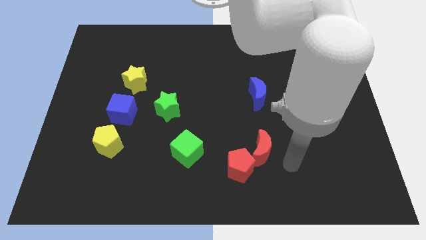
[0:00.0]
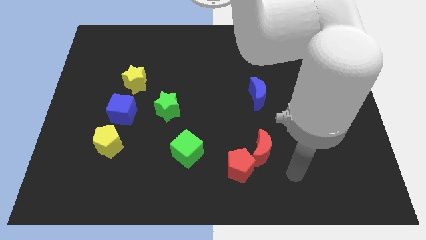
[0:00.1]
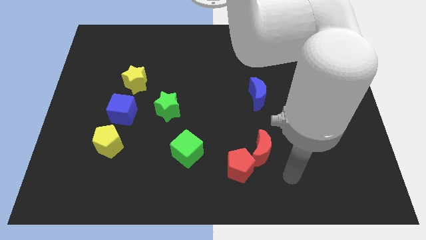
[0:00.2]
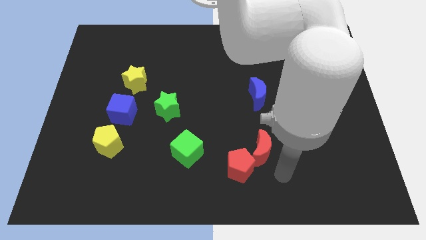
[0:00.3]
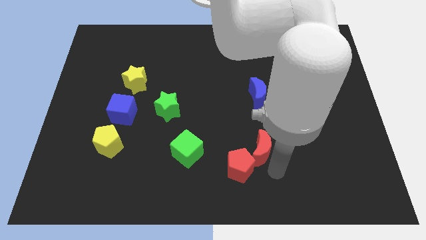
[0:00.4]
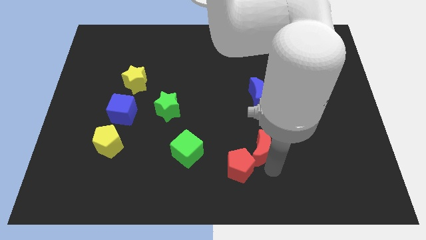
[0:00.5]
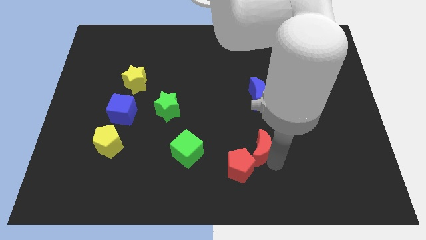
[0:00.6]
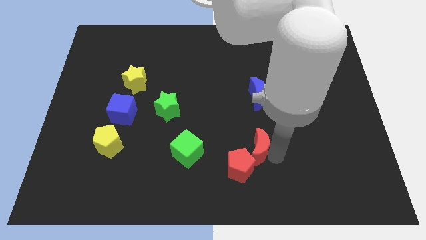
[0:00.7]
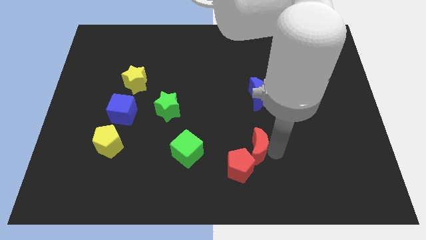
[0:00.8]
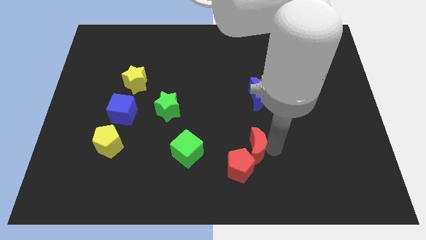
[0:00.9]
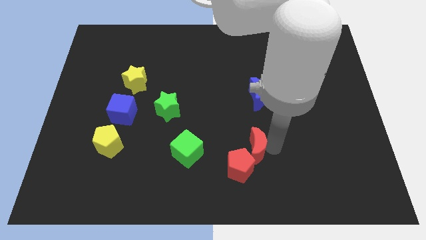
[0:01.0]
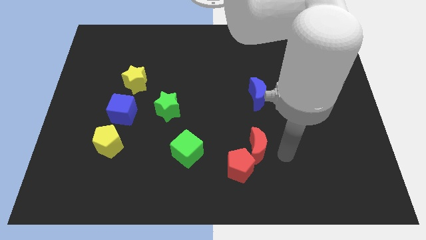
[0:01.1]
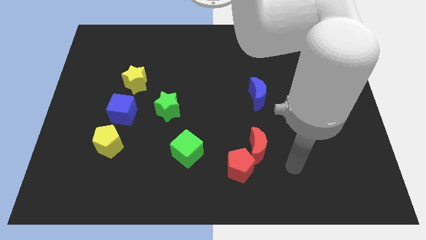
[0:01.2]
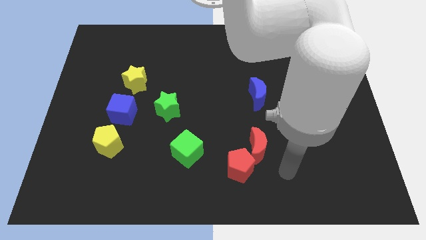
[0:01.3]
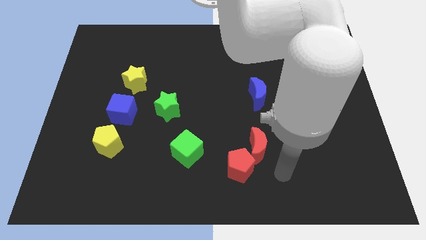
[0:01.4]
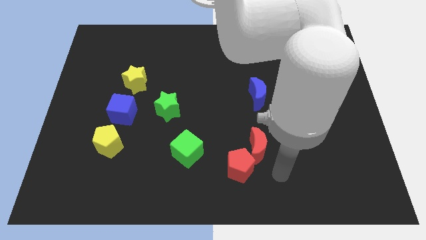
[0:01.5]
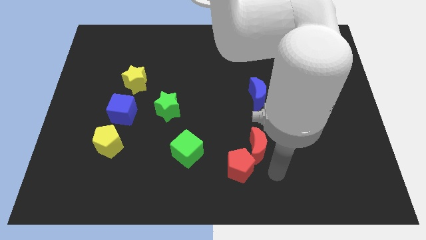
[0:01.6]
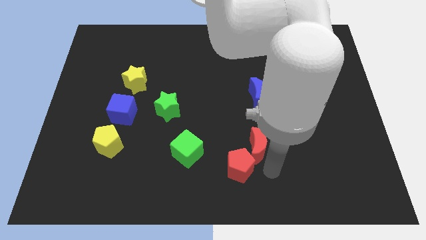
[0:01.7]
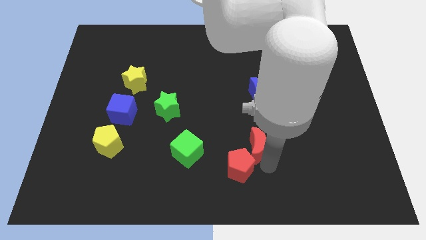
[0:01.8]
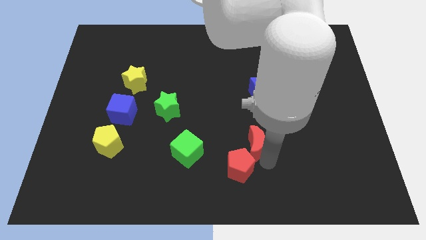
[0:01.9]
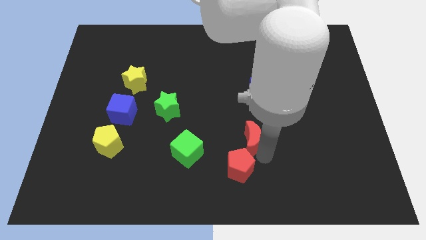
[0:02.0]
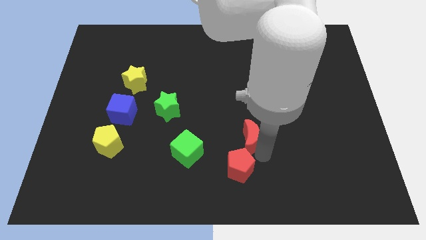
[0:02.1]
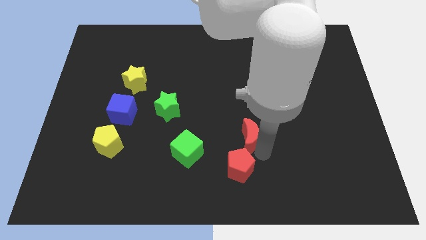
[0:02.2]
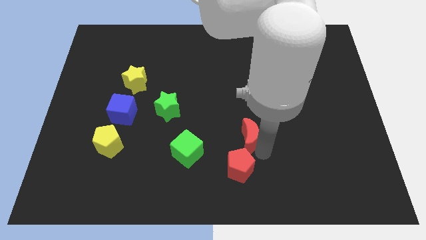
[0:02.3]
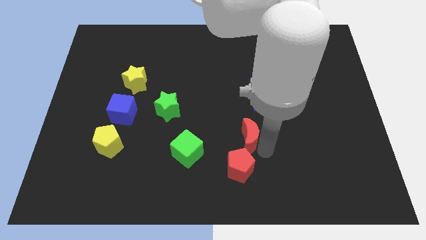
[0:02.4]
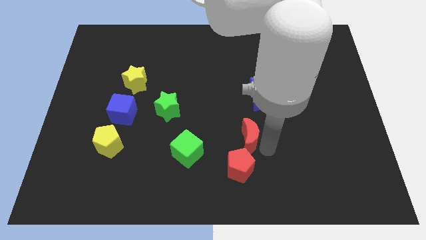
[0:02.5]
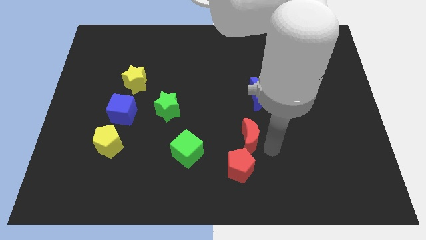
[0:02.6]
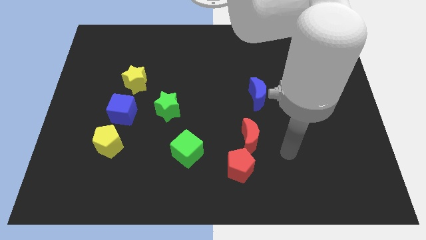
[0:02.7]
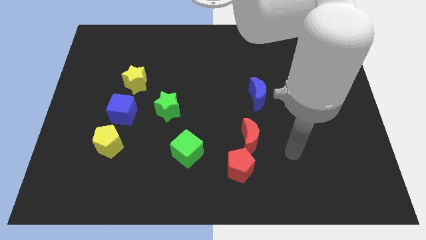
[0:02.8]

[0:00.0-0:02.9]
push red crescent above red pentagon

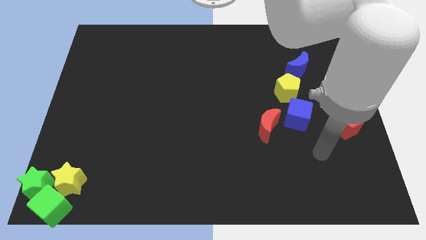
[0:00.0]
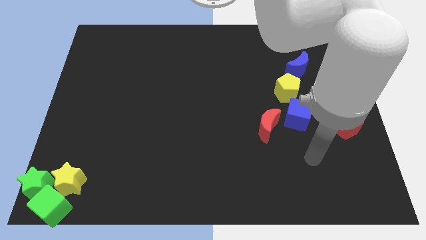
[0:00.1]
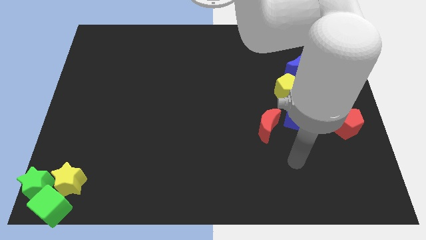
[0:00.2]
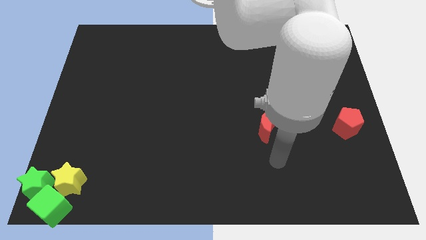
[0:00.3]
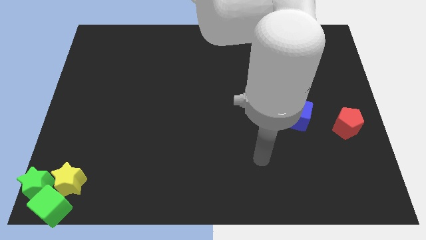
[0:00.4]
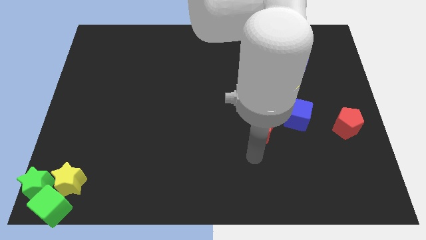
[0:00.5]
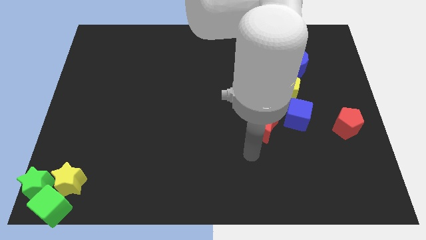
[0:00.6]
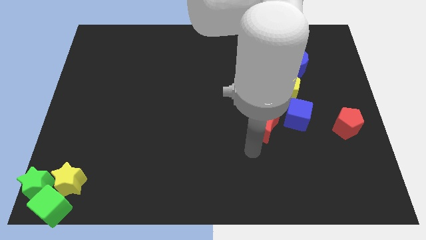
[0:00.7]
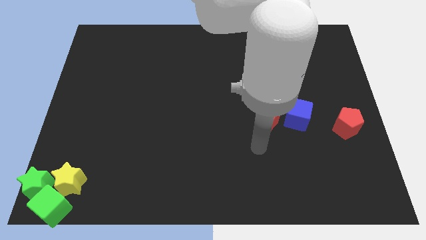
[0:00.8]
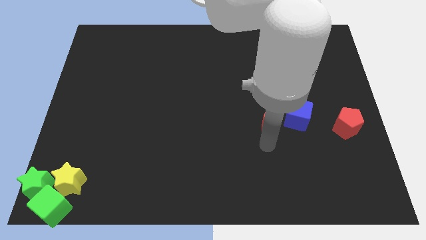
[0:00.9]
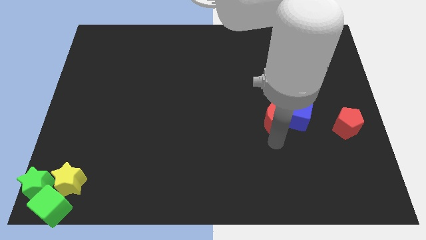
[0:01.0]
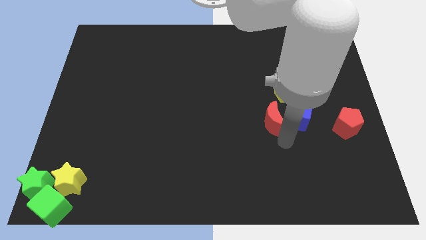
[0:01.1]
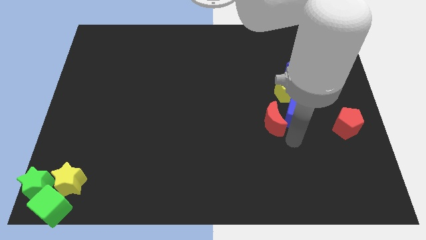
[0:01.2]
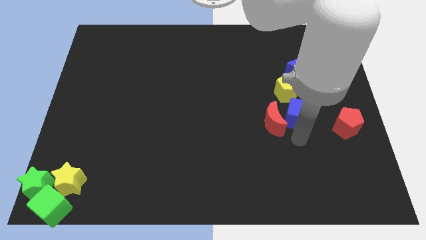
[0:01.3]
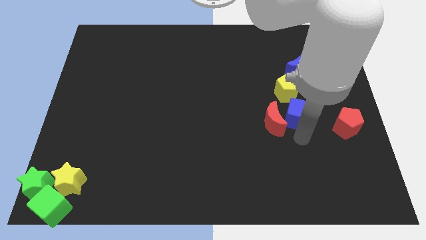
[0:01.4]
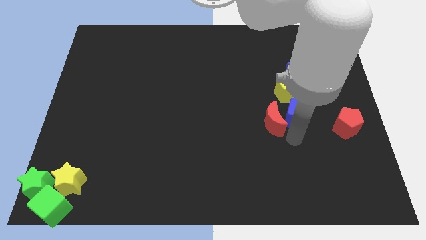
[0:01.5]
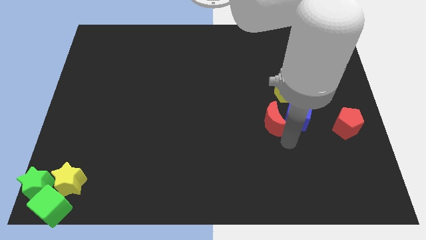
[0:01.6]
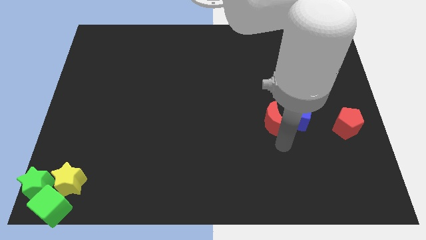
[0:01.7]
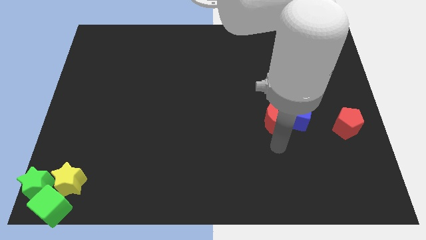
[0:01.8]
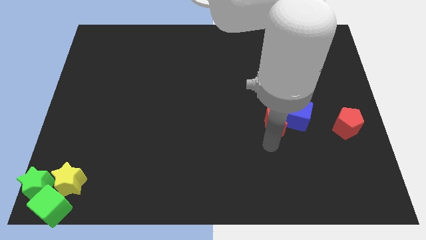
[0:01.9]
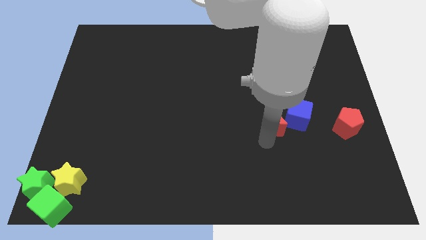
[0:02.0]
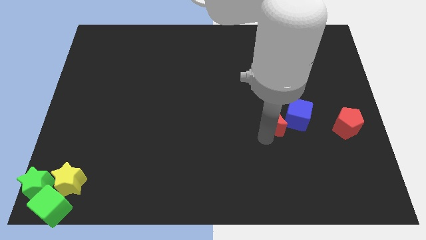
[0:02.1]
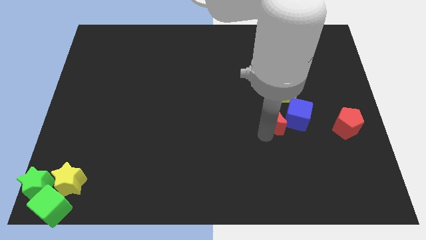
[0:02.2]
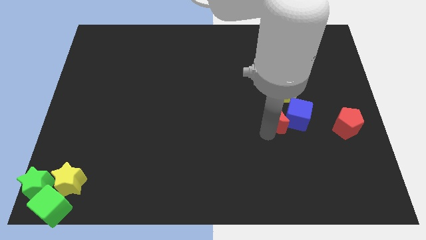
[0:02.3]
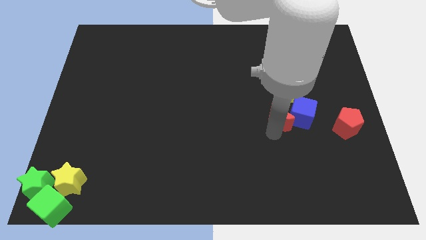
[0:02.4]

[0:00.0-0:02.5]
place the red crescent left to the blue cube

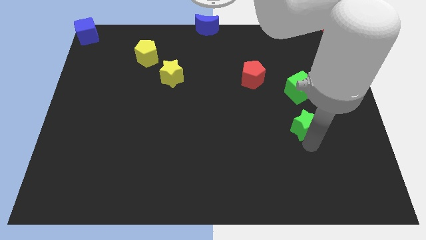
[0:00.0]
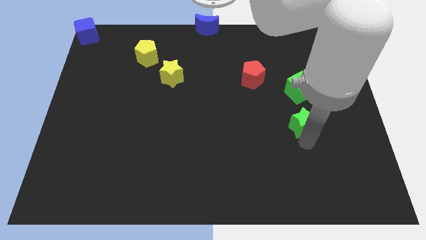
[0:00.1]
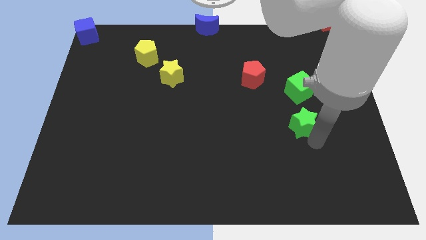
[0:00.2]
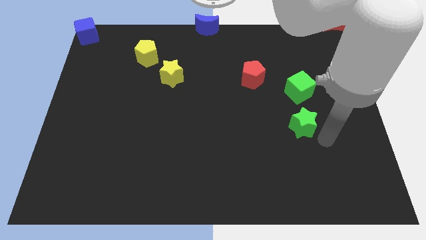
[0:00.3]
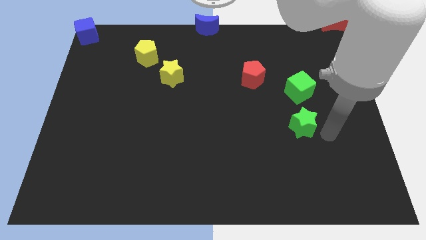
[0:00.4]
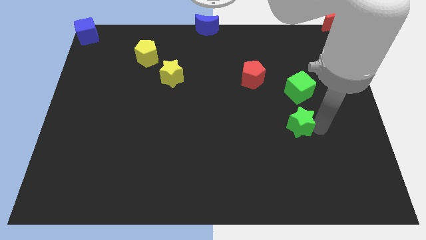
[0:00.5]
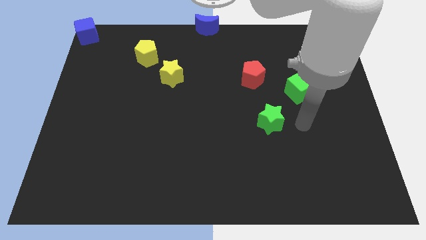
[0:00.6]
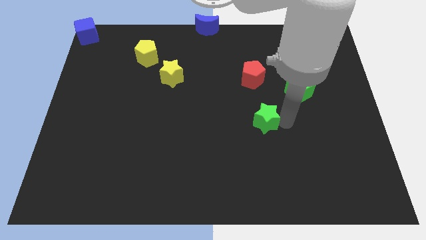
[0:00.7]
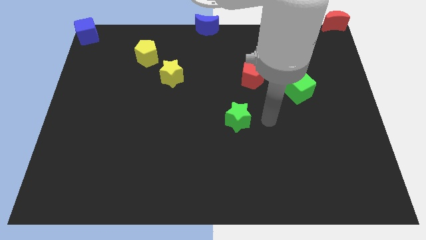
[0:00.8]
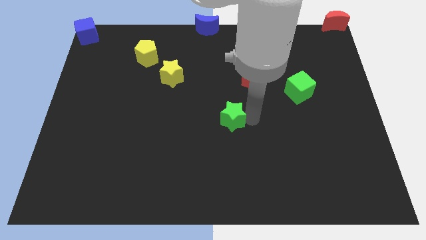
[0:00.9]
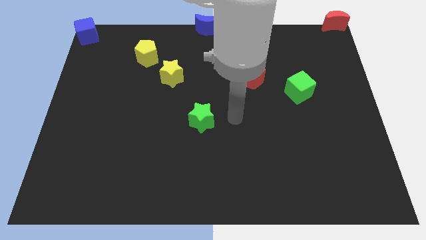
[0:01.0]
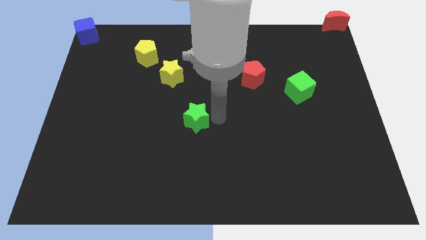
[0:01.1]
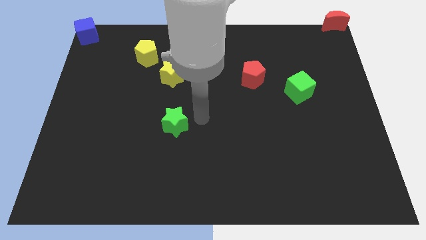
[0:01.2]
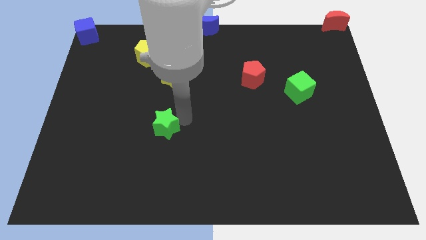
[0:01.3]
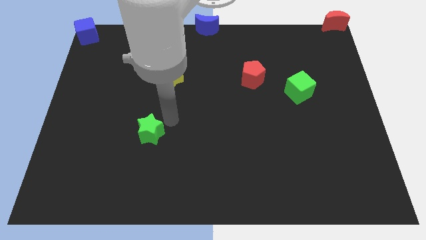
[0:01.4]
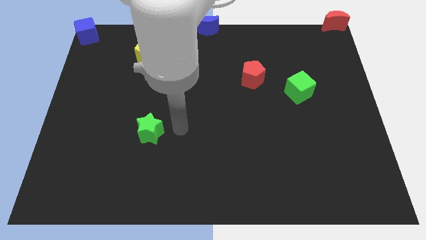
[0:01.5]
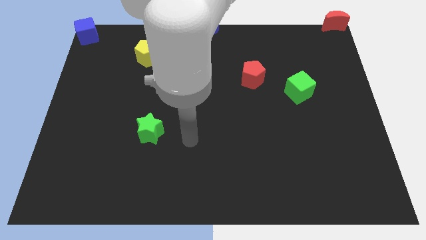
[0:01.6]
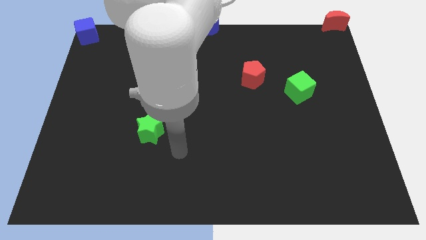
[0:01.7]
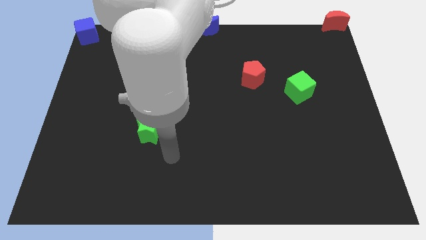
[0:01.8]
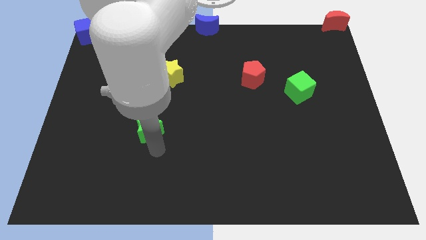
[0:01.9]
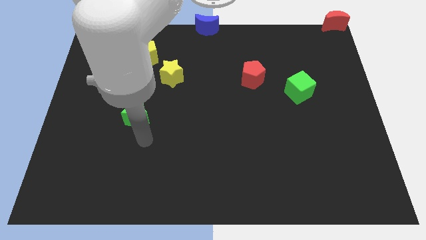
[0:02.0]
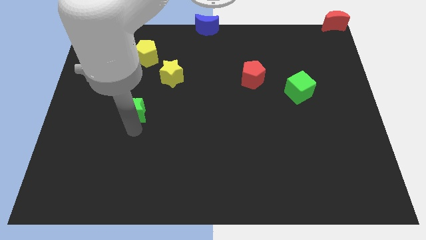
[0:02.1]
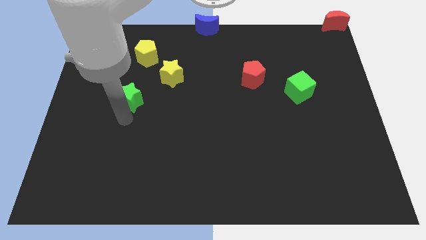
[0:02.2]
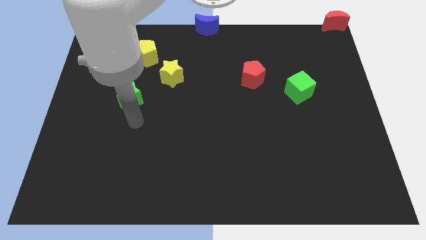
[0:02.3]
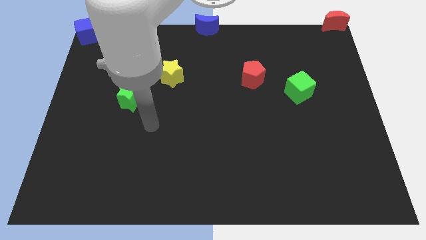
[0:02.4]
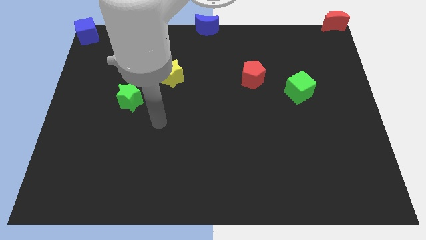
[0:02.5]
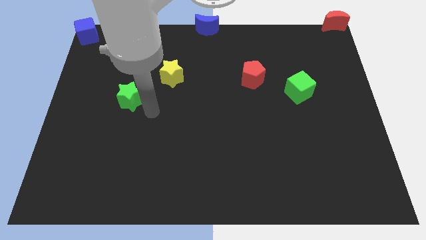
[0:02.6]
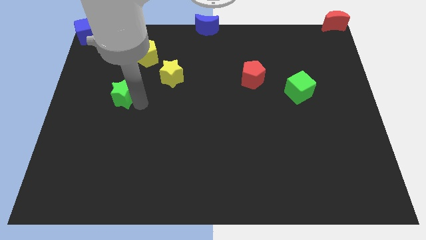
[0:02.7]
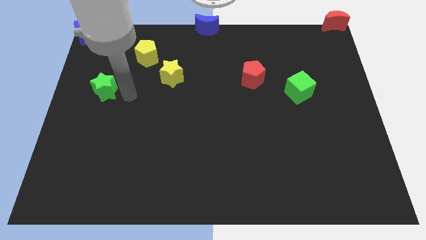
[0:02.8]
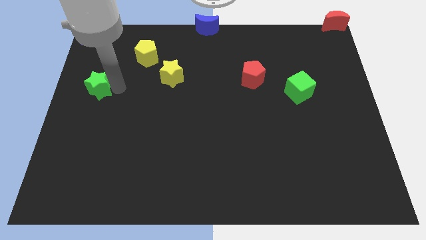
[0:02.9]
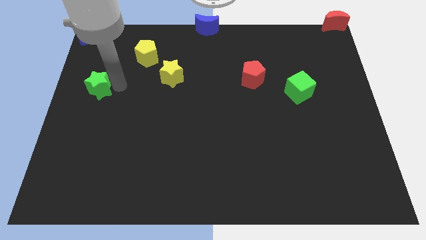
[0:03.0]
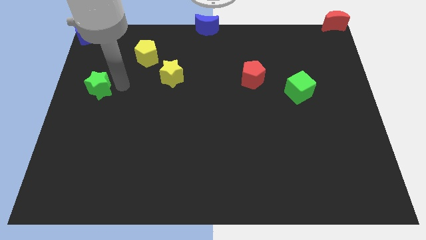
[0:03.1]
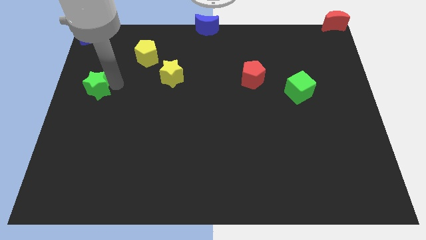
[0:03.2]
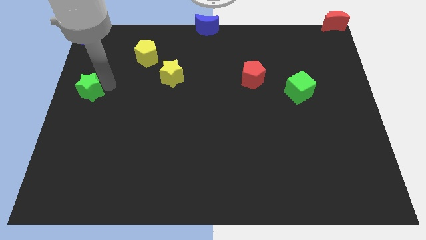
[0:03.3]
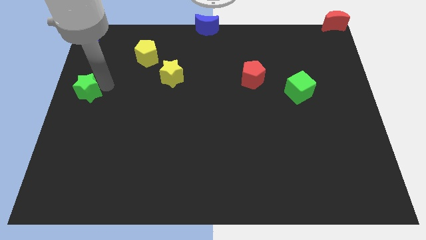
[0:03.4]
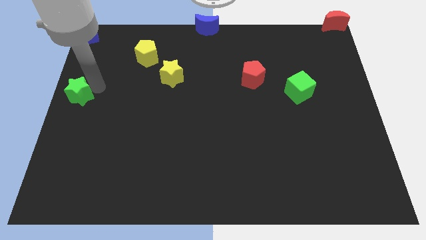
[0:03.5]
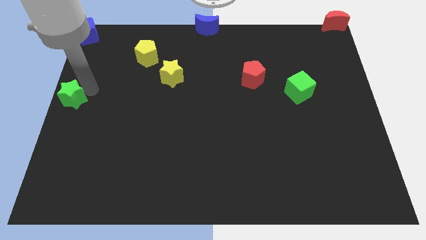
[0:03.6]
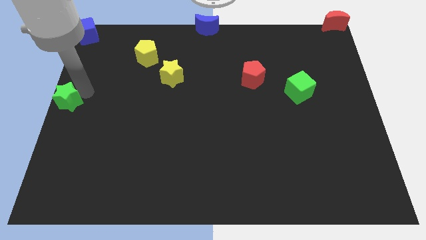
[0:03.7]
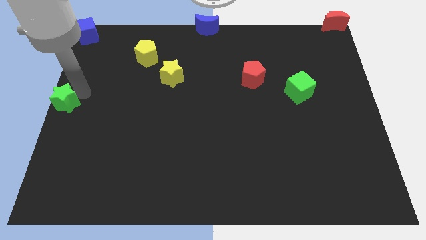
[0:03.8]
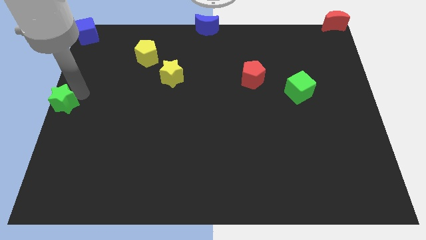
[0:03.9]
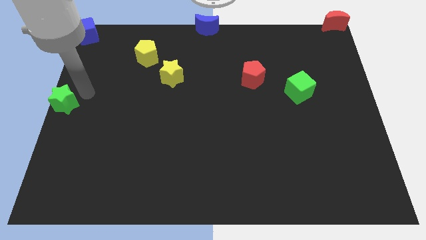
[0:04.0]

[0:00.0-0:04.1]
push the green star towrads the left center of the board
